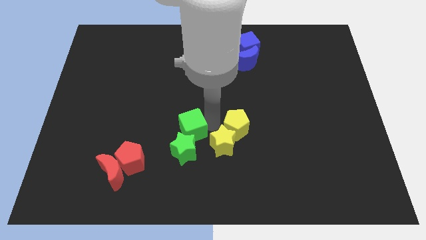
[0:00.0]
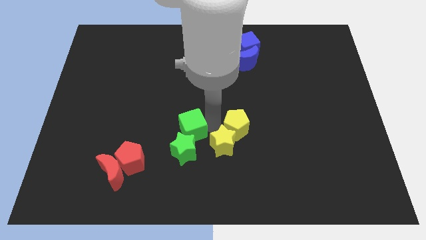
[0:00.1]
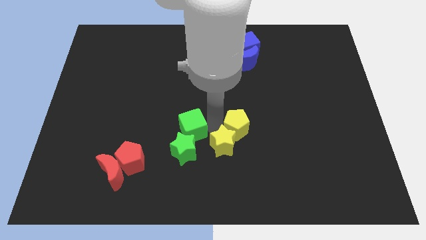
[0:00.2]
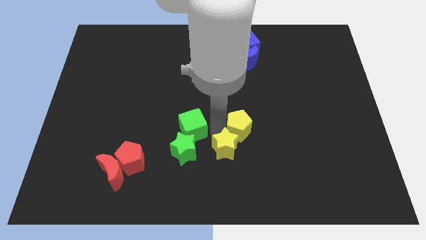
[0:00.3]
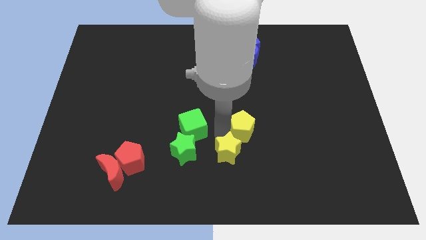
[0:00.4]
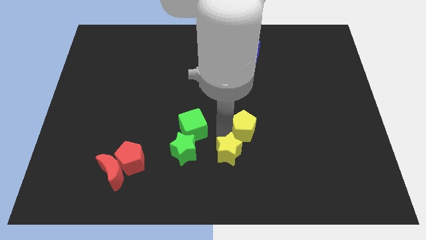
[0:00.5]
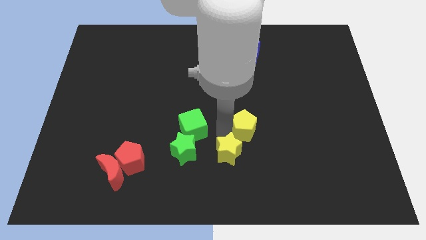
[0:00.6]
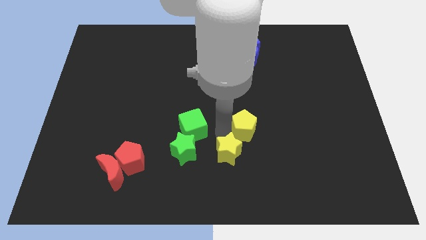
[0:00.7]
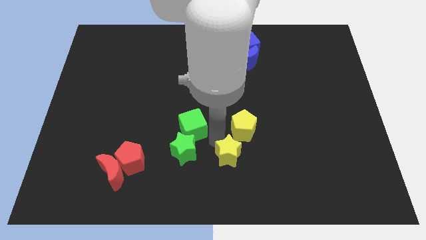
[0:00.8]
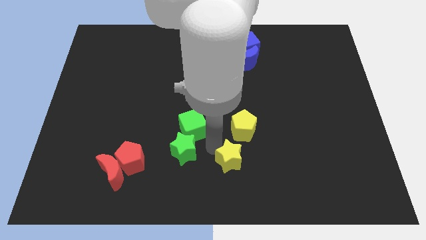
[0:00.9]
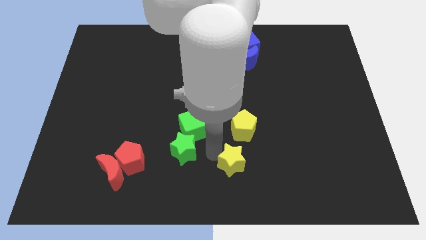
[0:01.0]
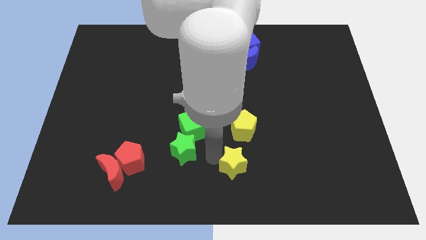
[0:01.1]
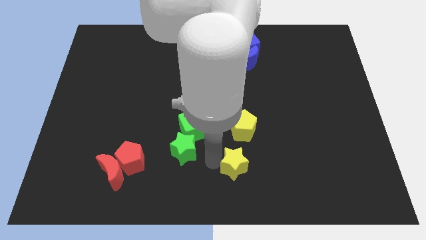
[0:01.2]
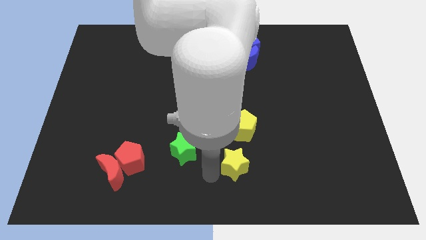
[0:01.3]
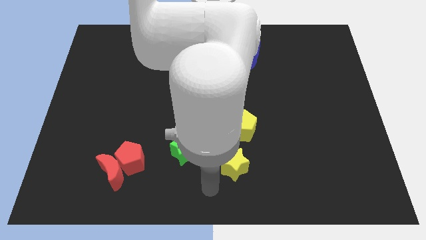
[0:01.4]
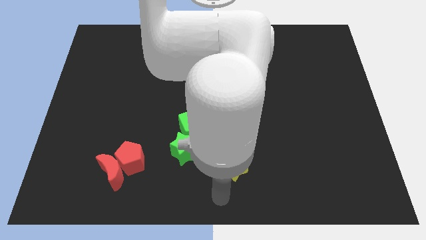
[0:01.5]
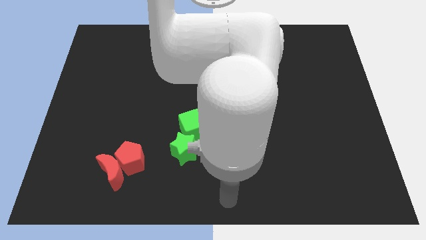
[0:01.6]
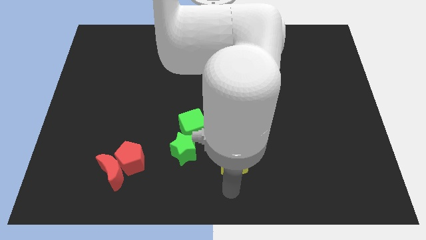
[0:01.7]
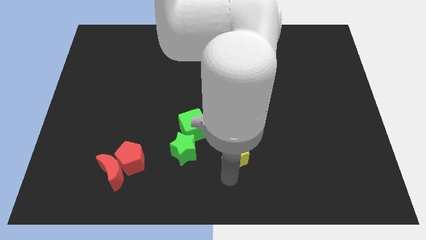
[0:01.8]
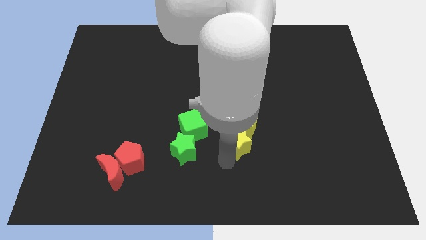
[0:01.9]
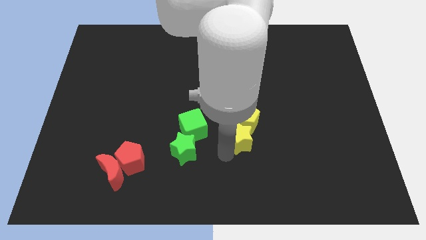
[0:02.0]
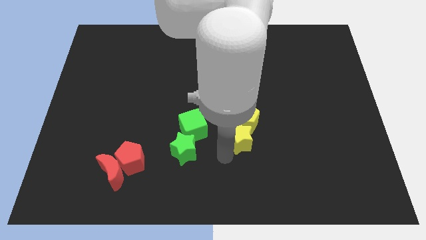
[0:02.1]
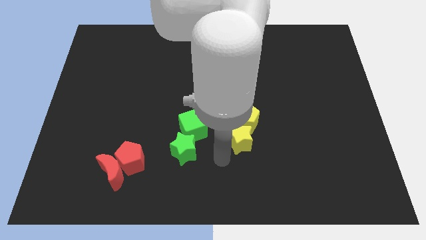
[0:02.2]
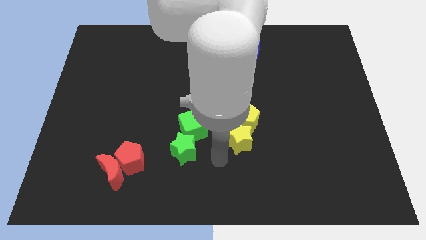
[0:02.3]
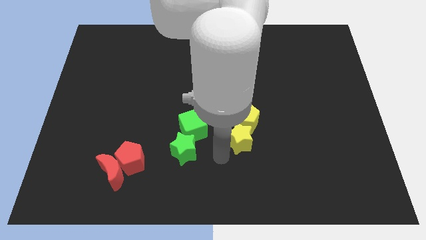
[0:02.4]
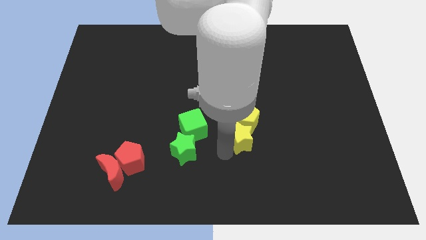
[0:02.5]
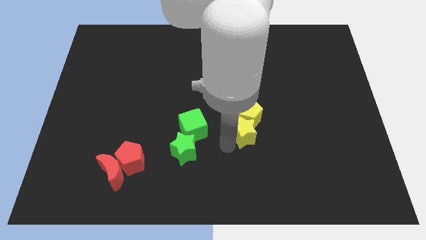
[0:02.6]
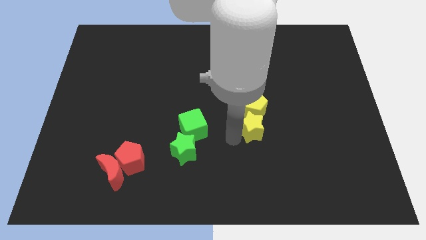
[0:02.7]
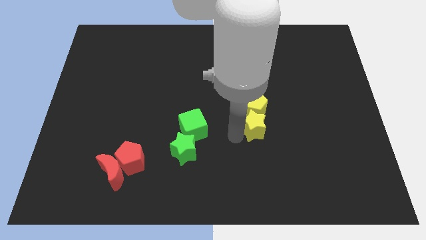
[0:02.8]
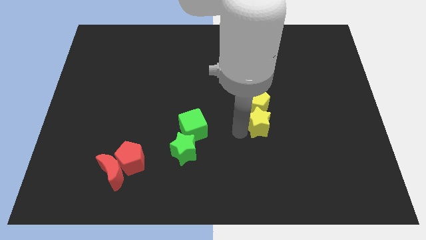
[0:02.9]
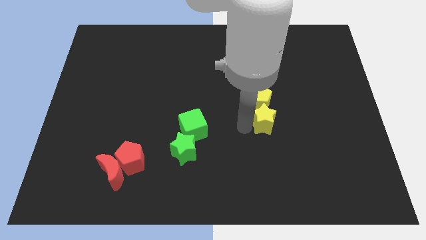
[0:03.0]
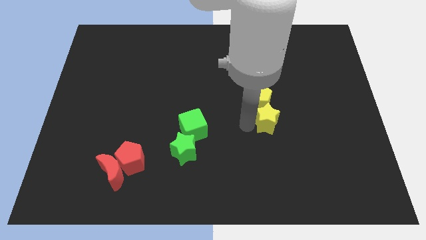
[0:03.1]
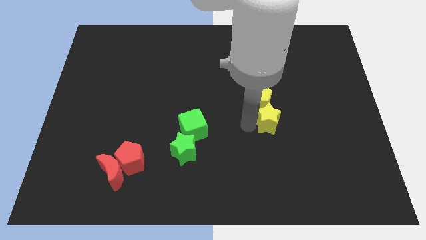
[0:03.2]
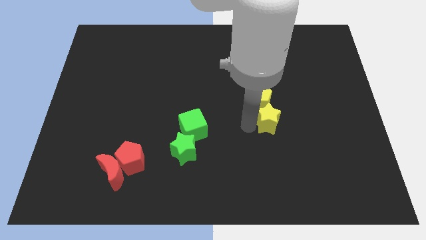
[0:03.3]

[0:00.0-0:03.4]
move the group of yellow blocks away from the group of green blocks

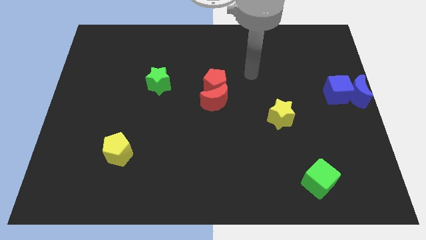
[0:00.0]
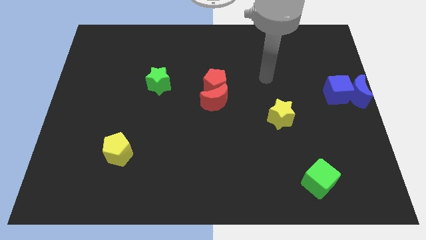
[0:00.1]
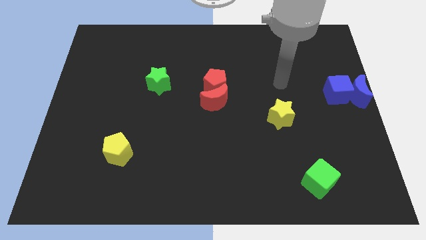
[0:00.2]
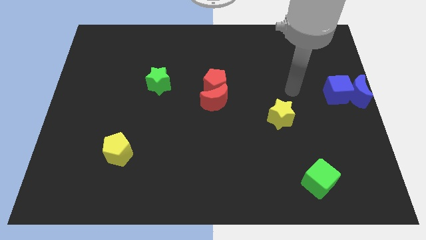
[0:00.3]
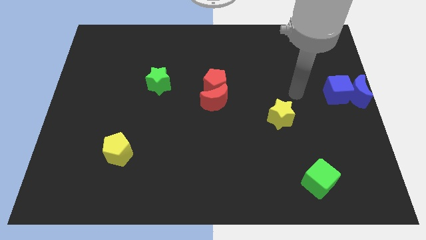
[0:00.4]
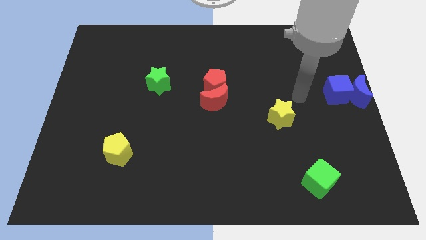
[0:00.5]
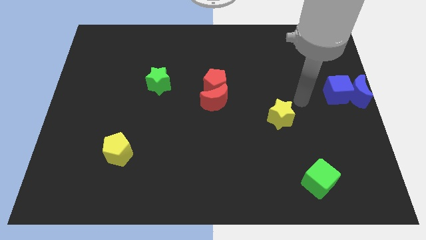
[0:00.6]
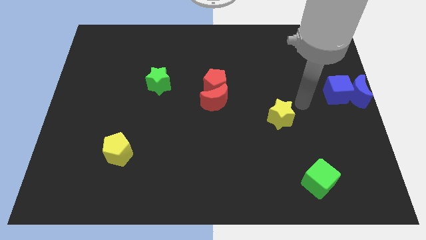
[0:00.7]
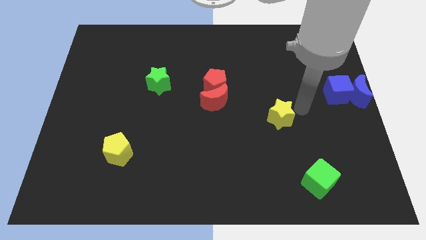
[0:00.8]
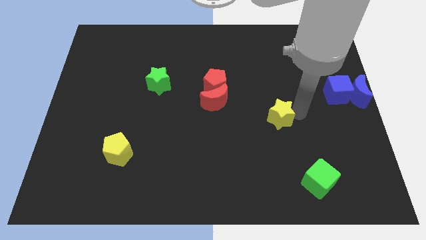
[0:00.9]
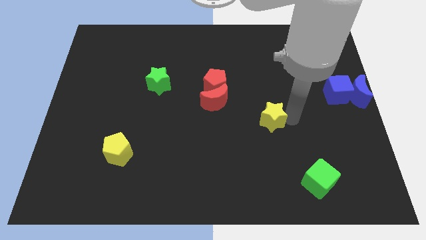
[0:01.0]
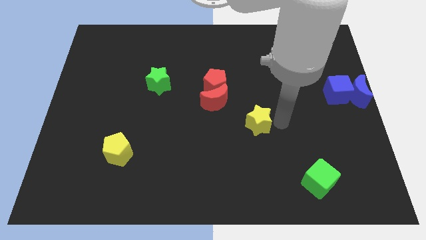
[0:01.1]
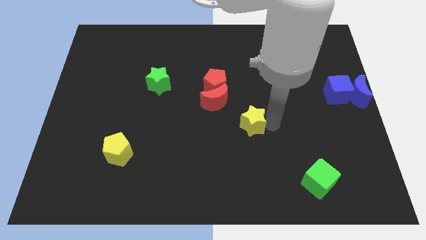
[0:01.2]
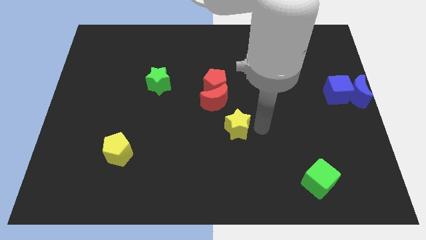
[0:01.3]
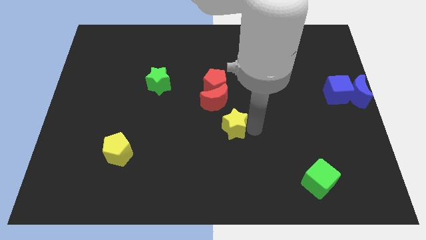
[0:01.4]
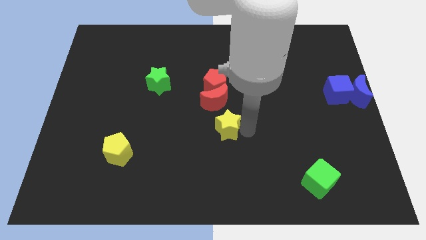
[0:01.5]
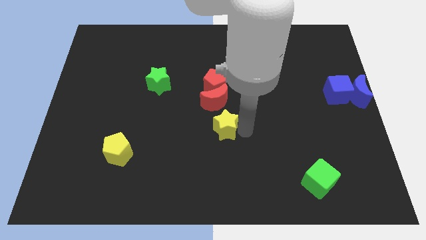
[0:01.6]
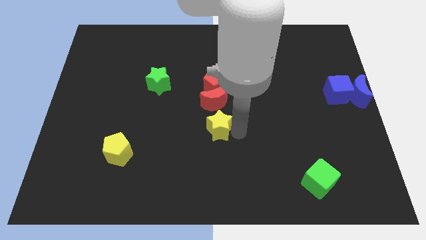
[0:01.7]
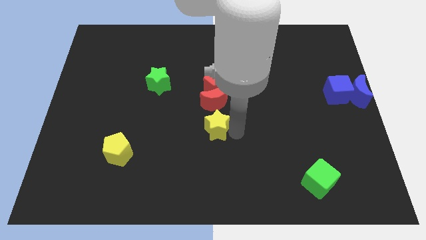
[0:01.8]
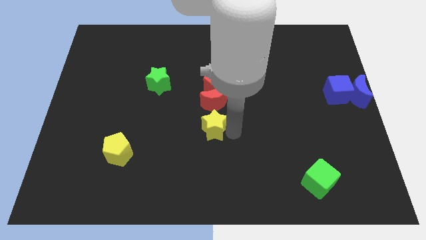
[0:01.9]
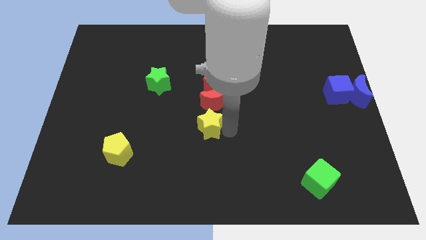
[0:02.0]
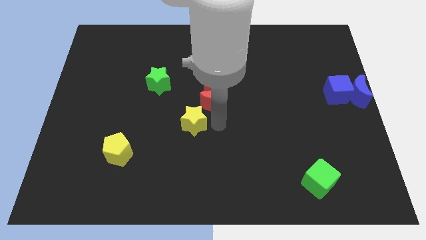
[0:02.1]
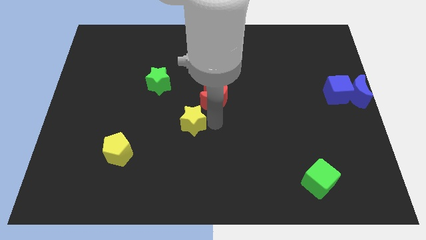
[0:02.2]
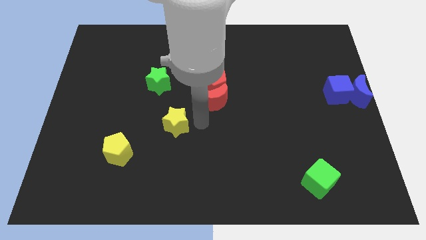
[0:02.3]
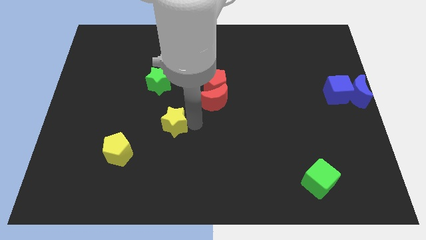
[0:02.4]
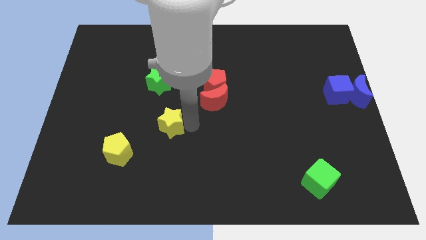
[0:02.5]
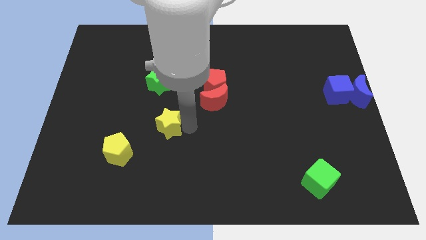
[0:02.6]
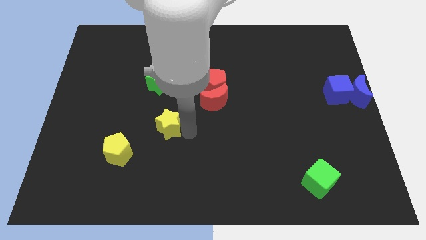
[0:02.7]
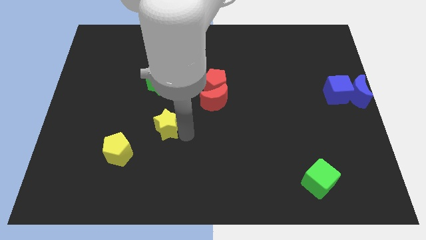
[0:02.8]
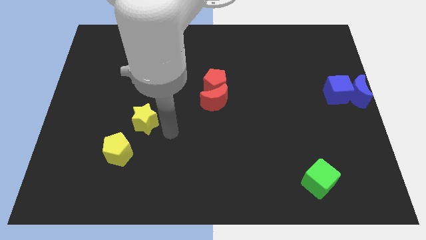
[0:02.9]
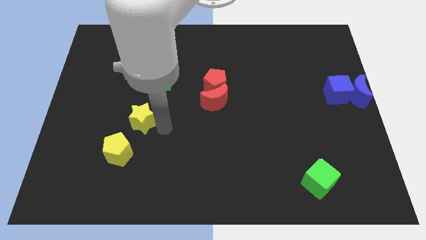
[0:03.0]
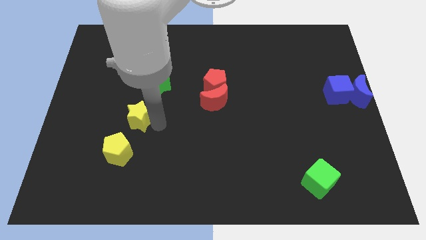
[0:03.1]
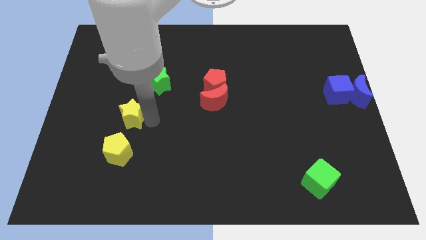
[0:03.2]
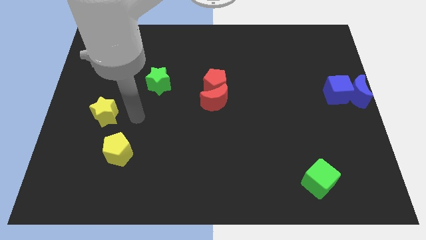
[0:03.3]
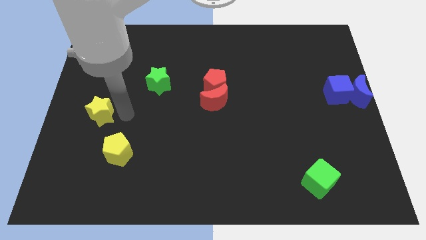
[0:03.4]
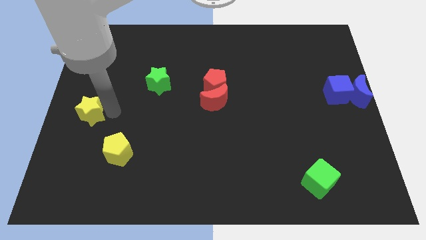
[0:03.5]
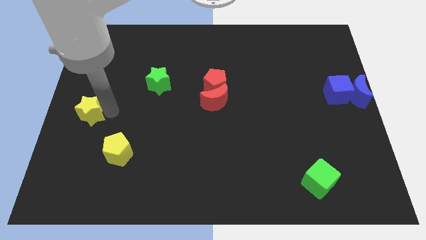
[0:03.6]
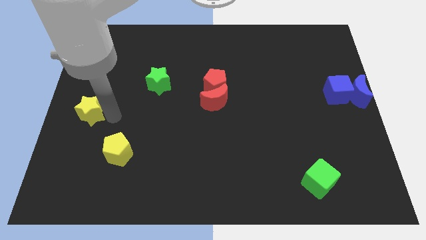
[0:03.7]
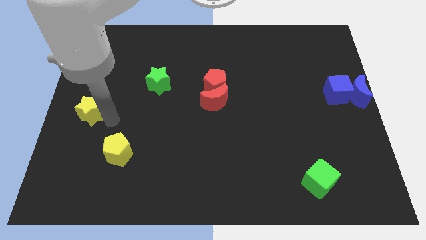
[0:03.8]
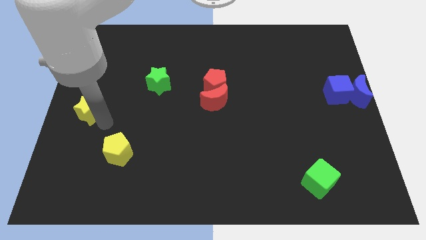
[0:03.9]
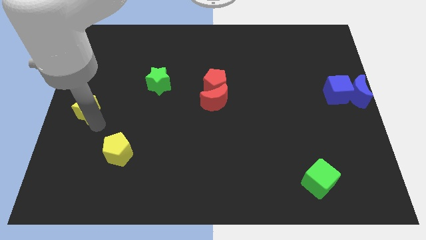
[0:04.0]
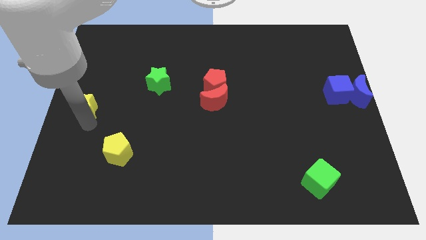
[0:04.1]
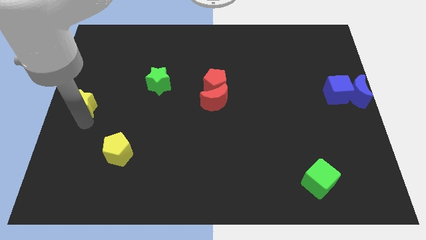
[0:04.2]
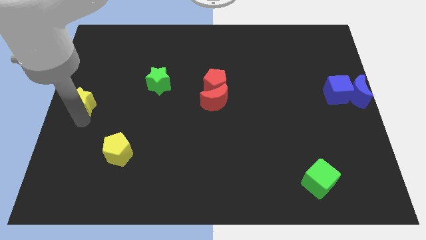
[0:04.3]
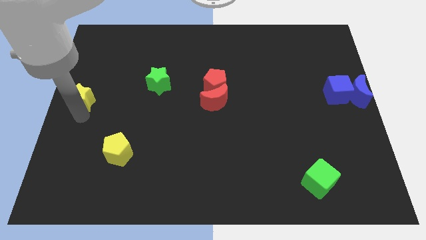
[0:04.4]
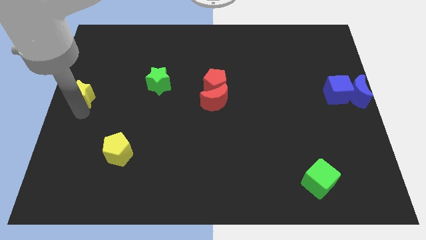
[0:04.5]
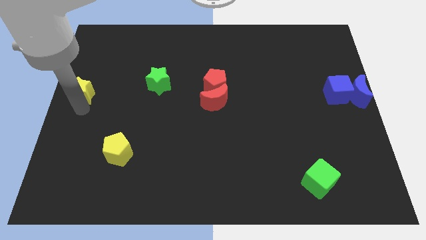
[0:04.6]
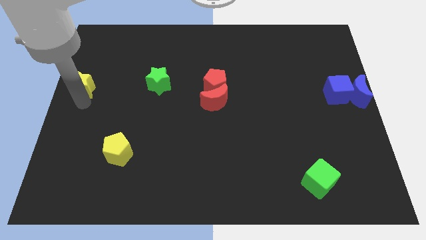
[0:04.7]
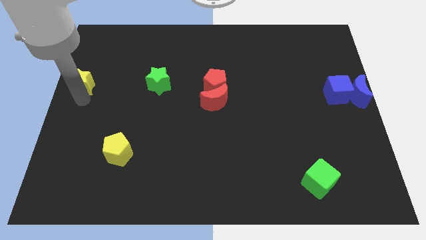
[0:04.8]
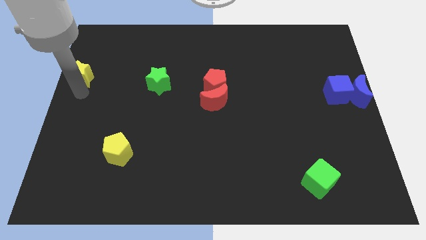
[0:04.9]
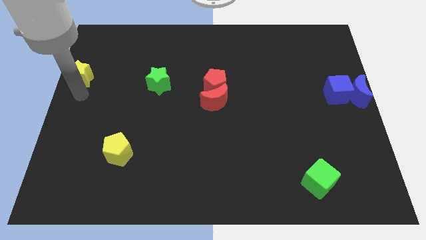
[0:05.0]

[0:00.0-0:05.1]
move the yellow star towards the left center of the board

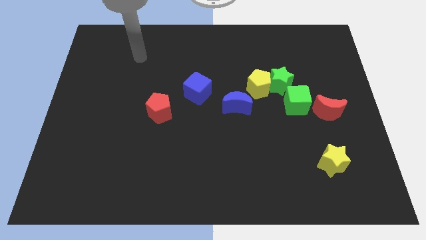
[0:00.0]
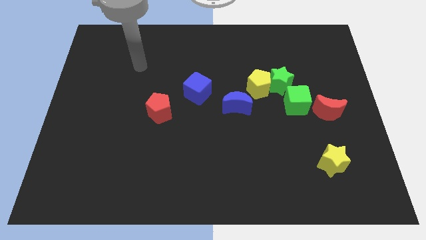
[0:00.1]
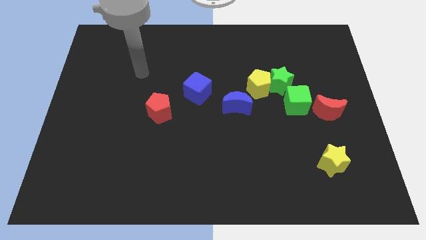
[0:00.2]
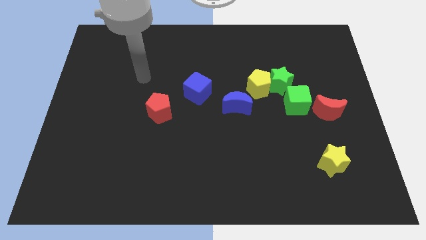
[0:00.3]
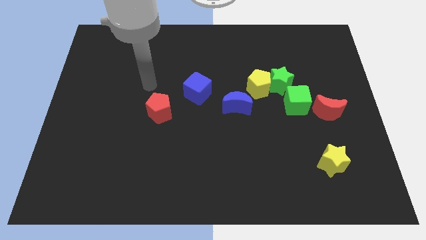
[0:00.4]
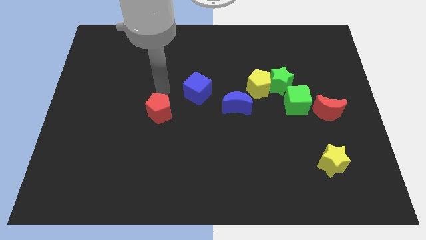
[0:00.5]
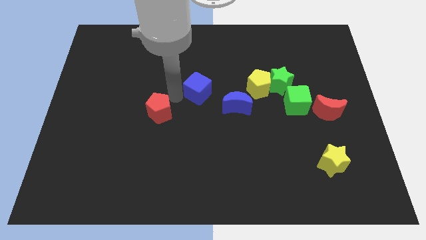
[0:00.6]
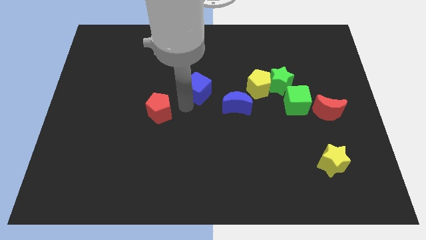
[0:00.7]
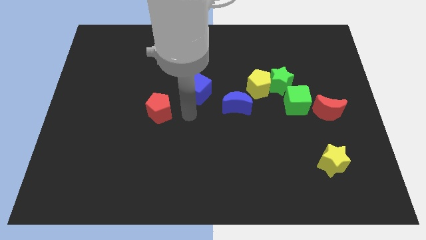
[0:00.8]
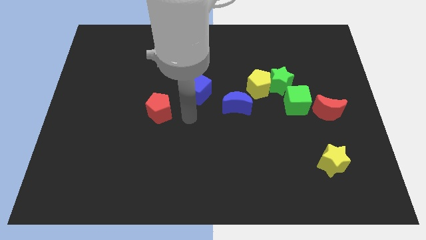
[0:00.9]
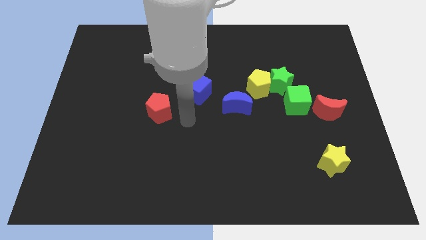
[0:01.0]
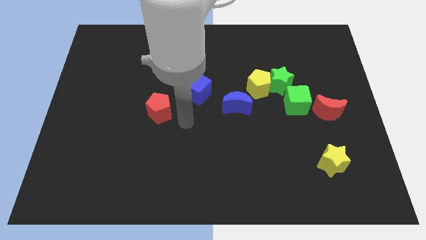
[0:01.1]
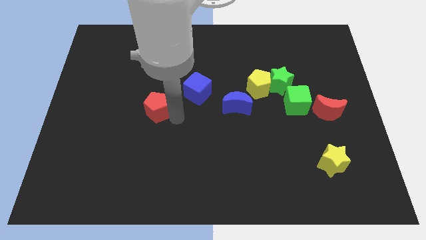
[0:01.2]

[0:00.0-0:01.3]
place the arm near the red pentagon
